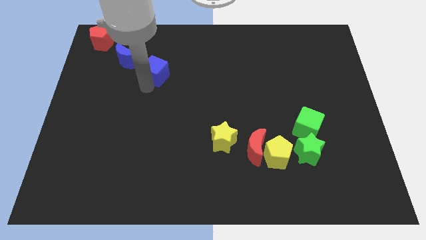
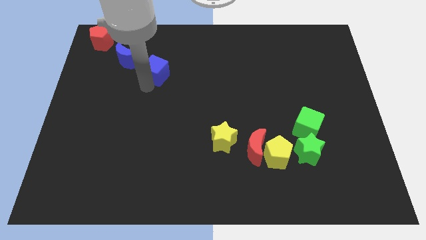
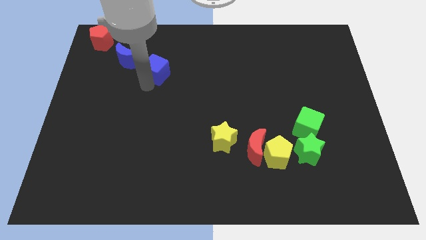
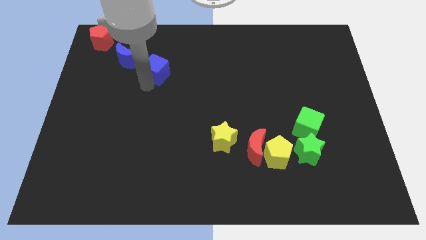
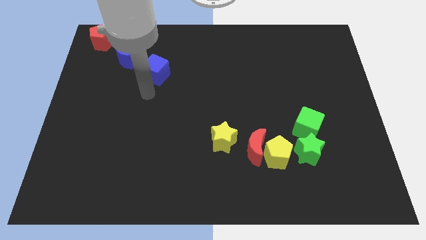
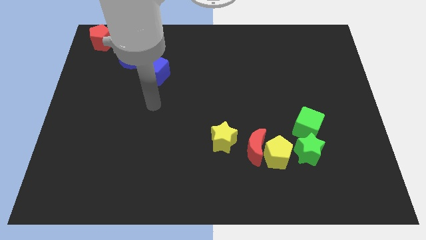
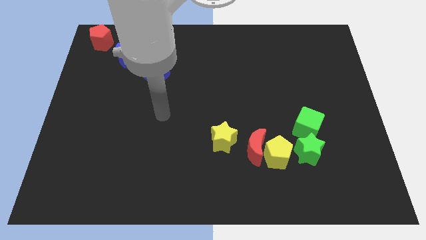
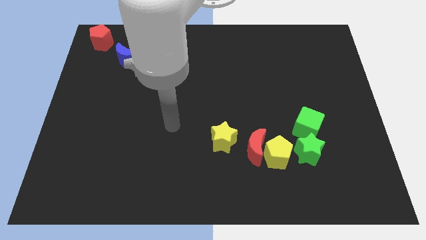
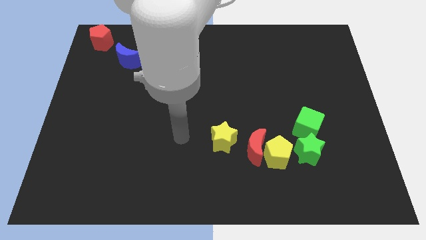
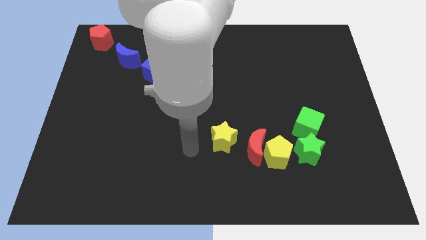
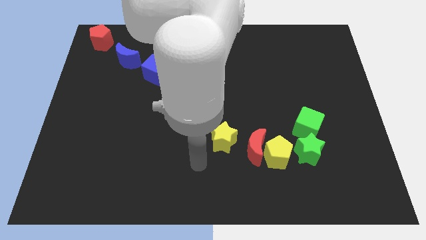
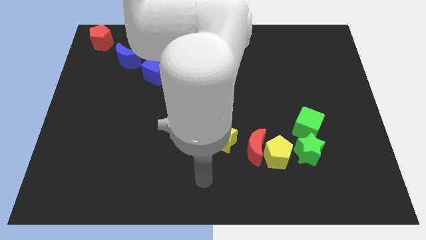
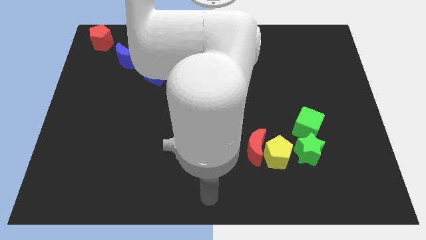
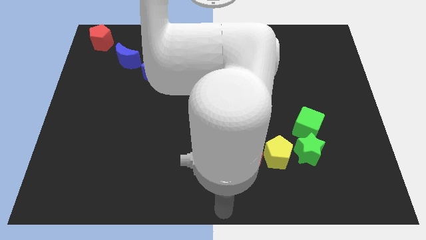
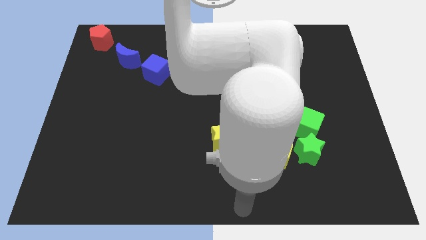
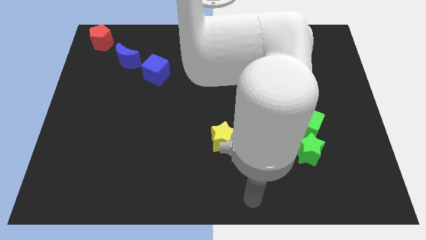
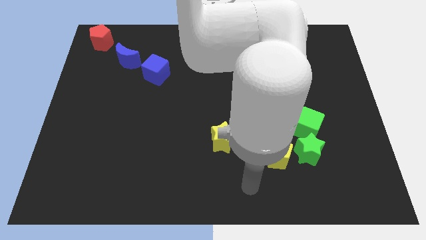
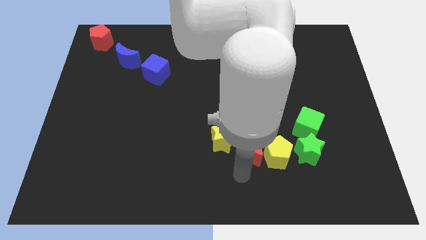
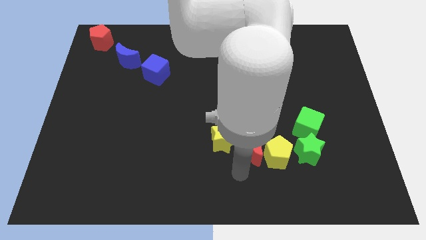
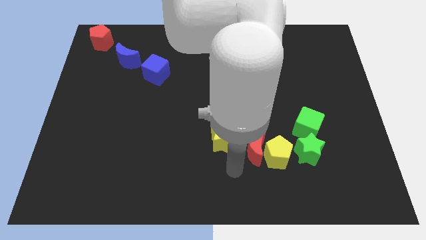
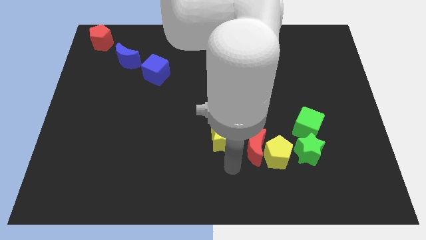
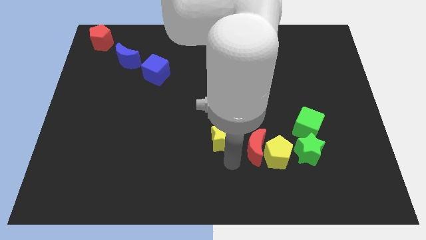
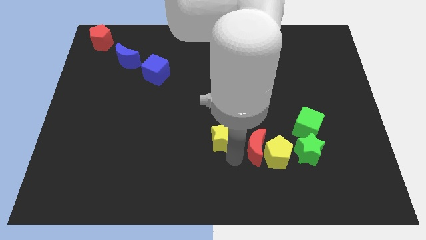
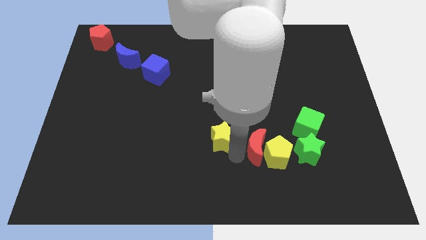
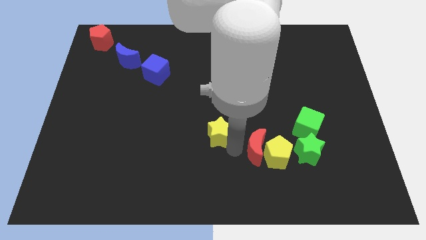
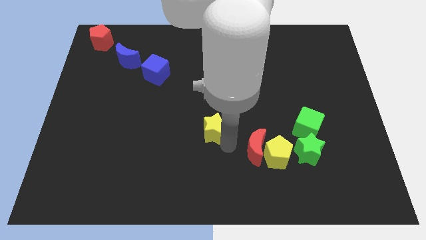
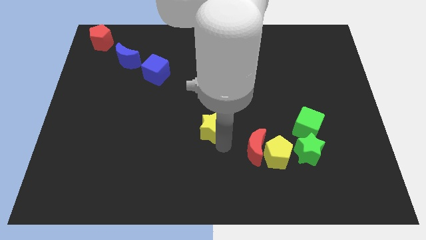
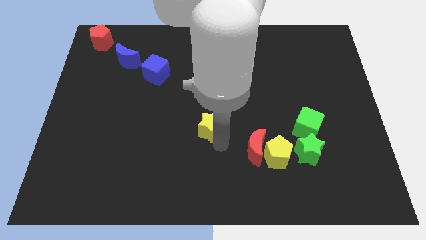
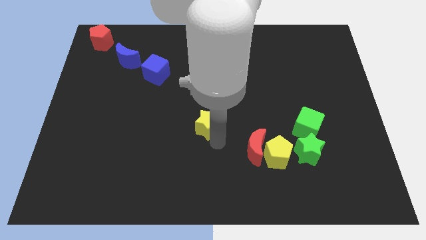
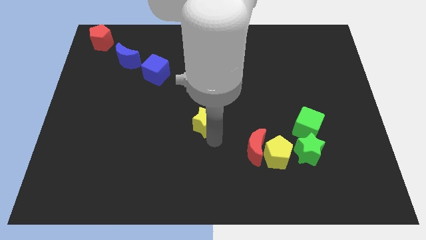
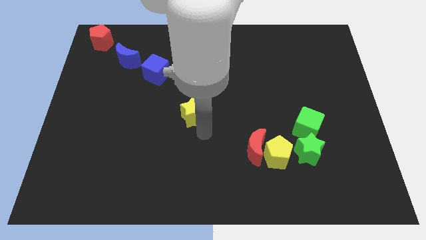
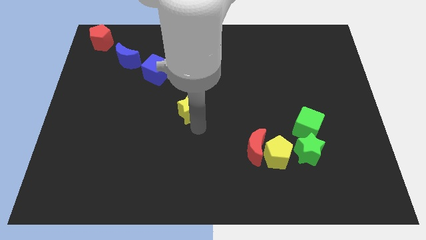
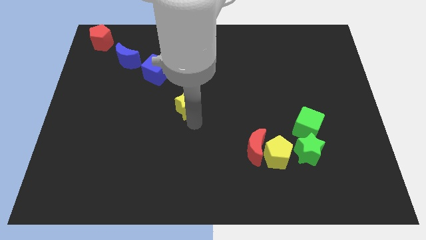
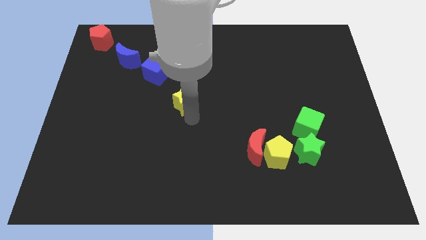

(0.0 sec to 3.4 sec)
place the yellow star to the bottom right side of the blue cube

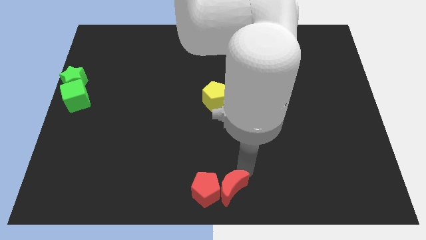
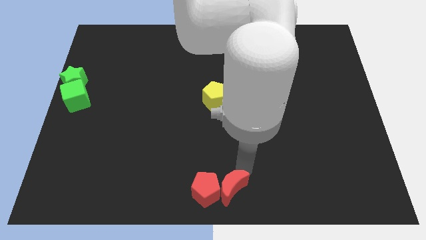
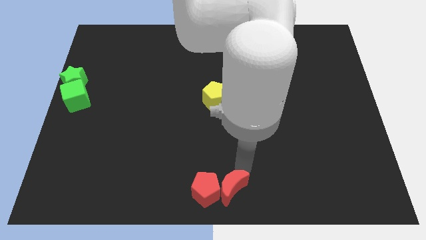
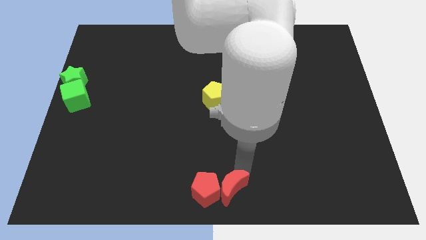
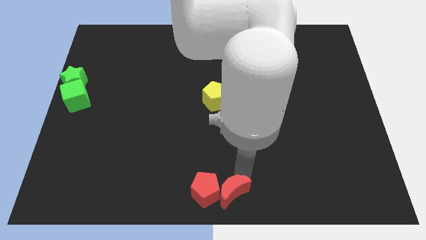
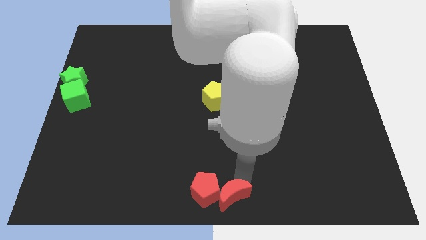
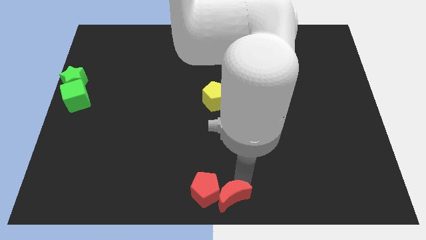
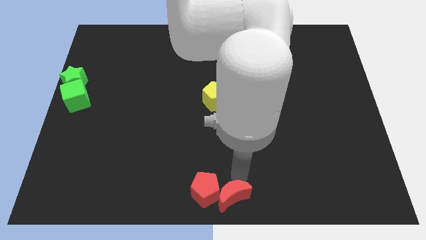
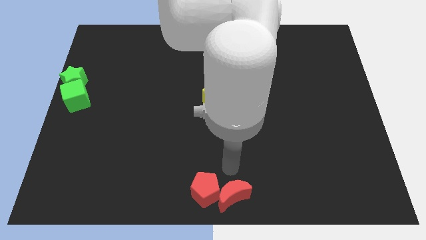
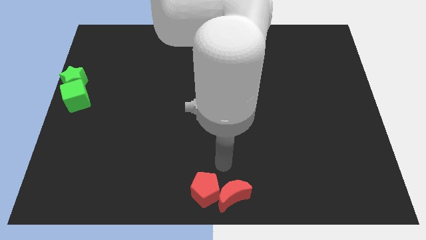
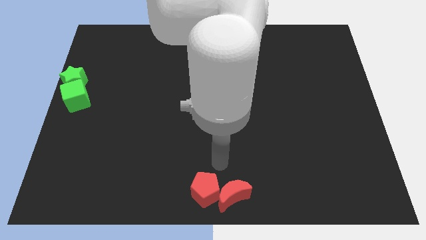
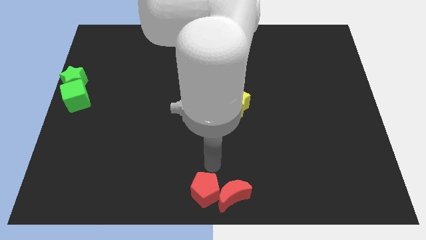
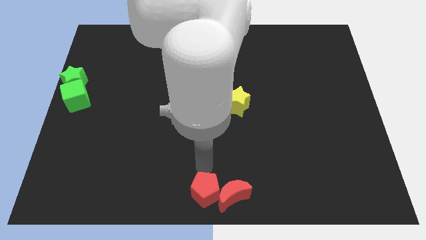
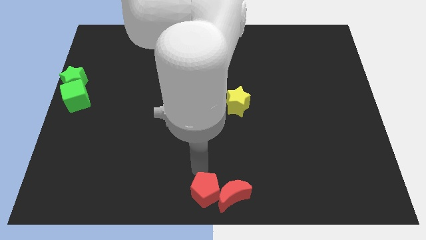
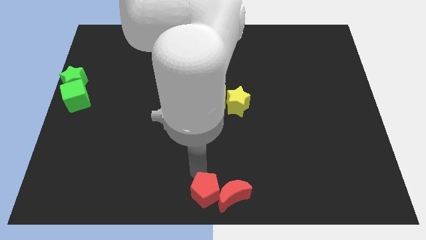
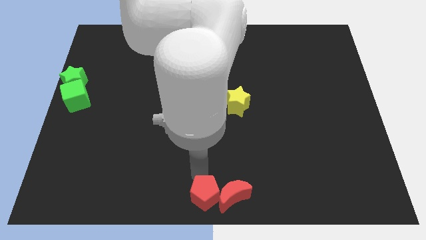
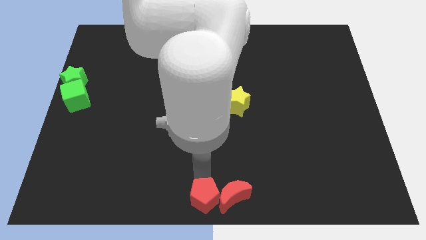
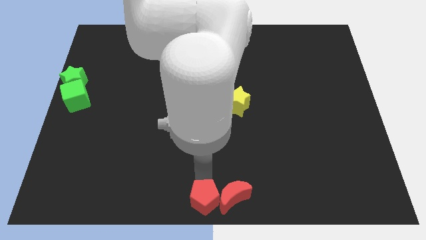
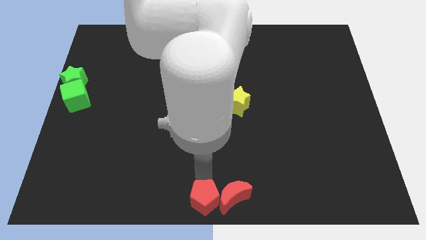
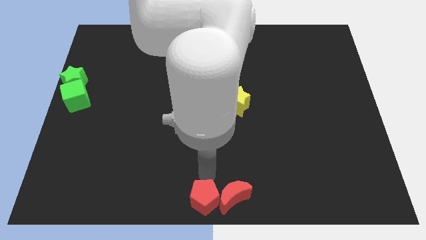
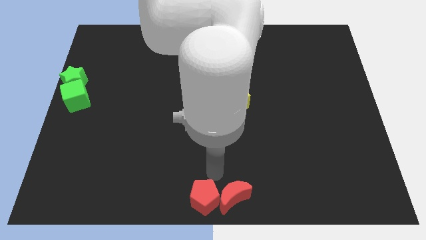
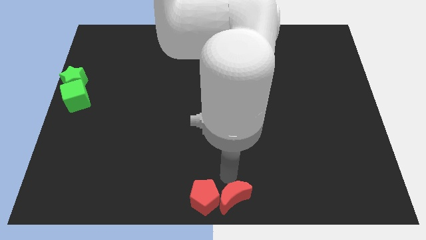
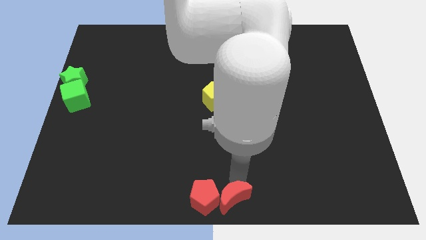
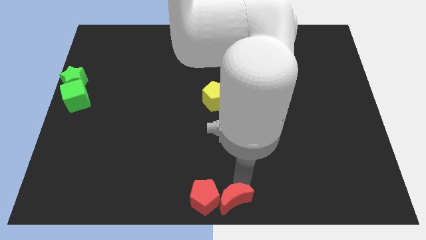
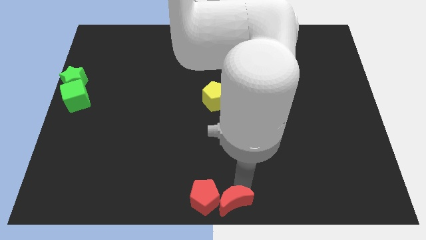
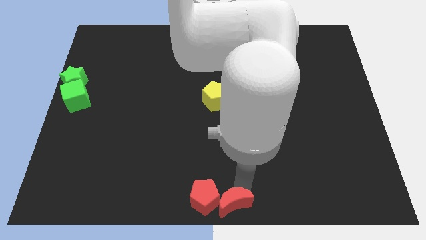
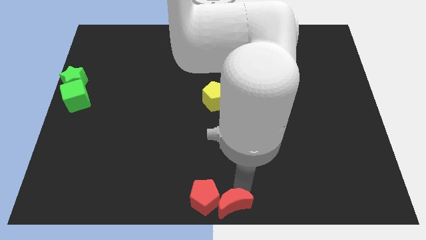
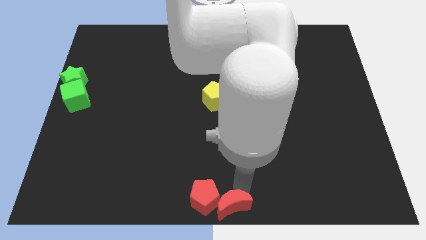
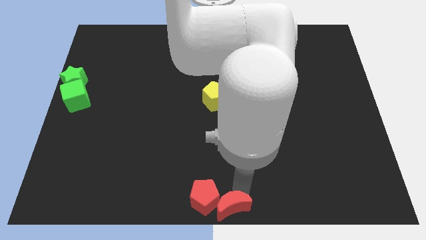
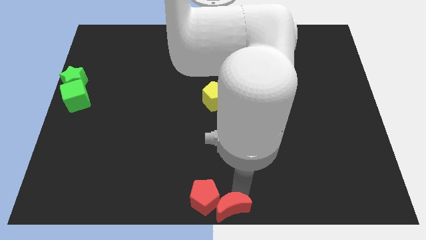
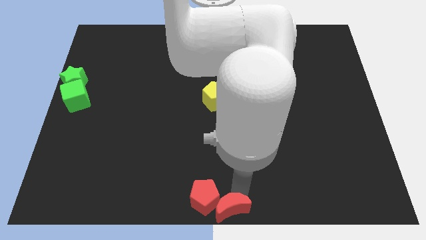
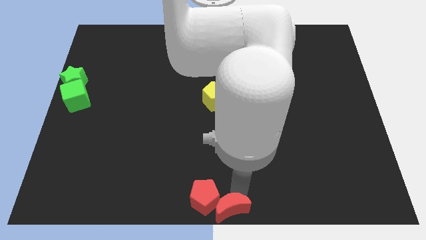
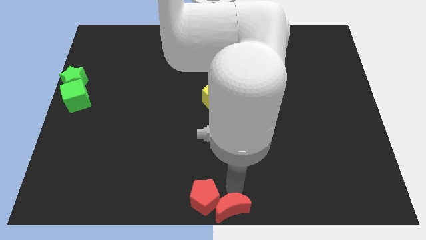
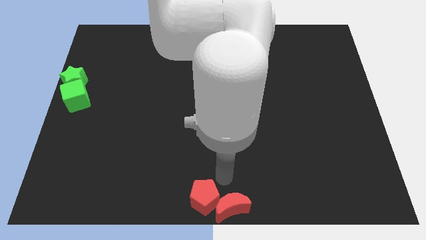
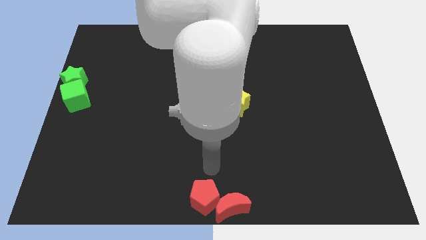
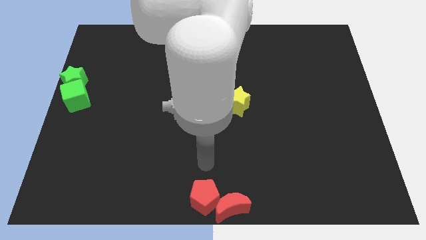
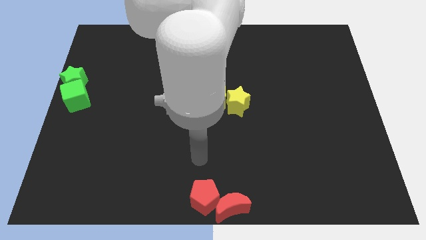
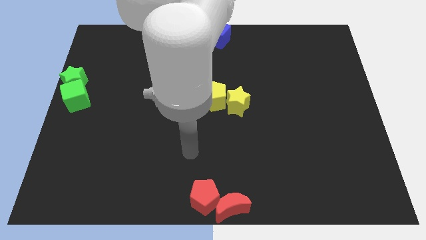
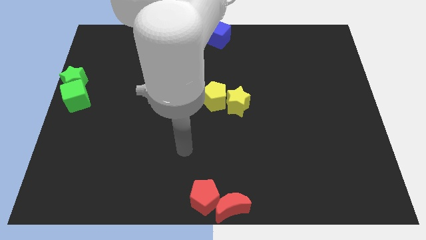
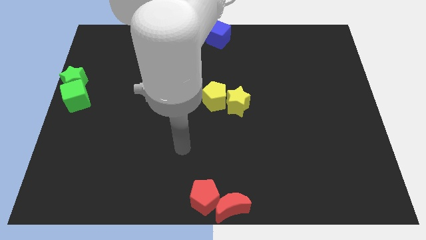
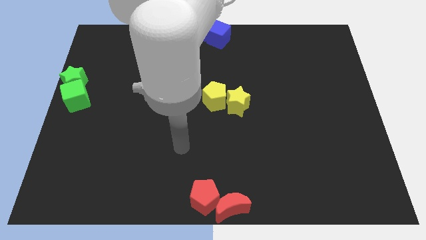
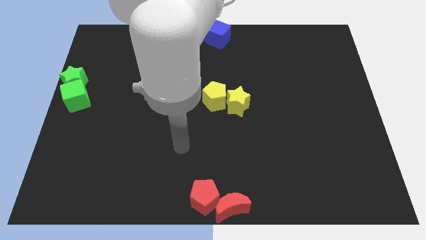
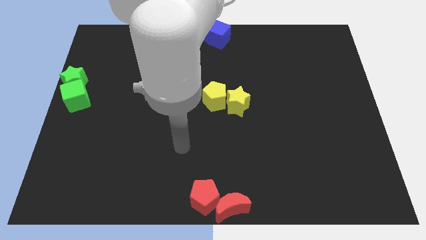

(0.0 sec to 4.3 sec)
push the red blocks to the bottom center together

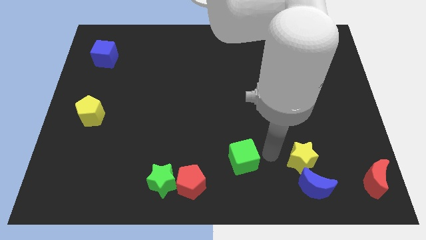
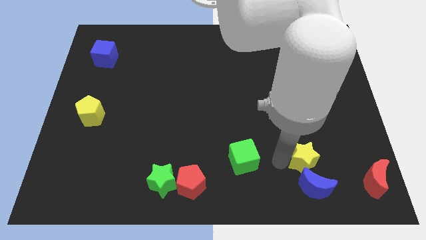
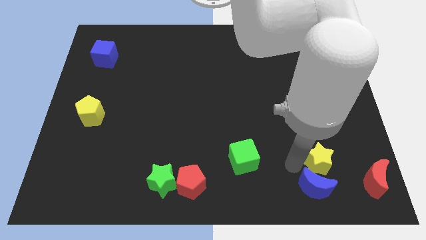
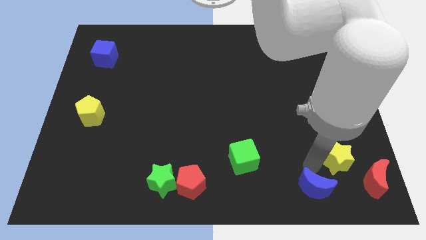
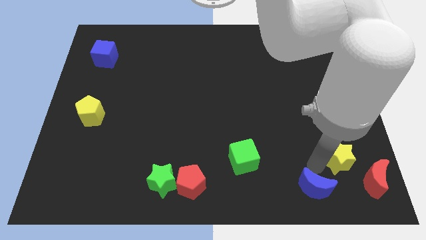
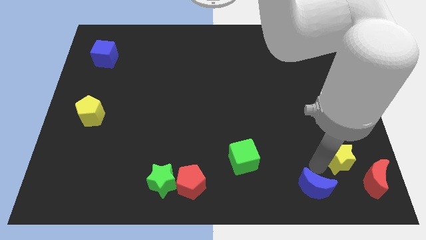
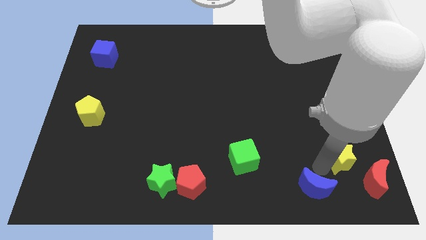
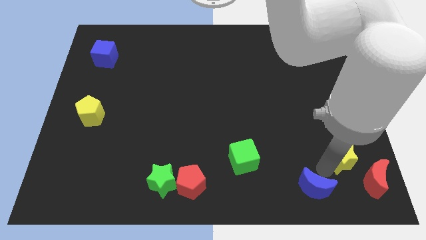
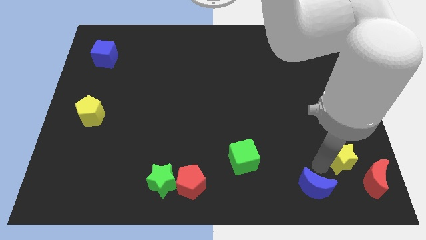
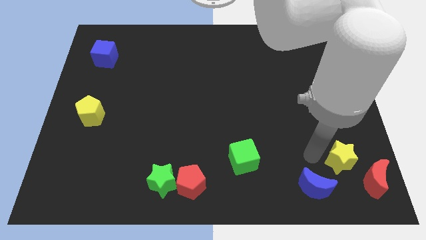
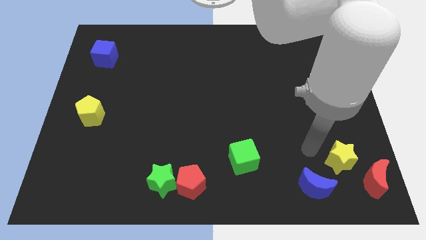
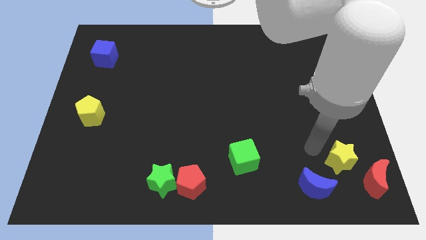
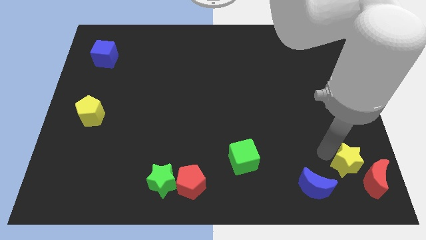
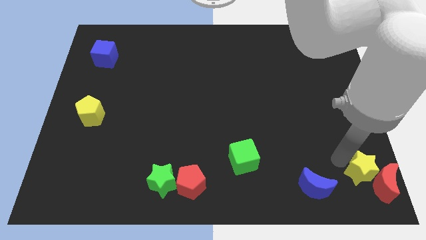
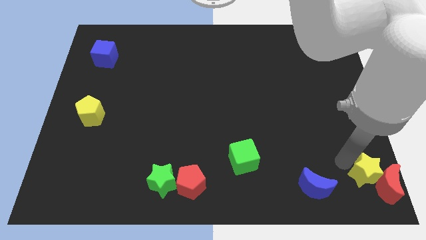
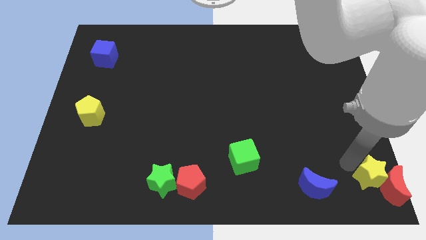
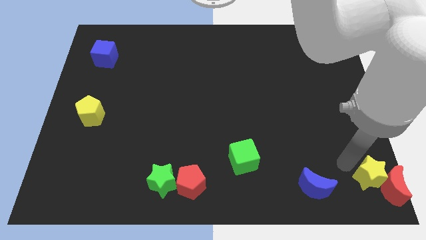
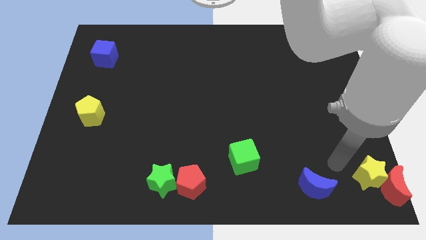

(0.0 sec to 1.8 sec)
move the yellow star into the red moon to the right side
